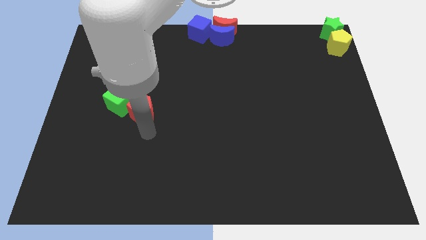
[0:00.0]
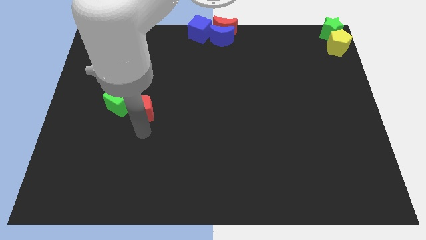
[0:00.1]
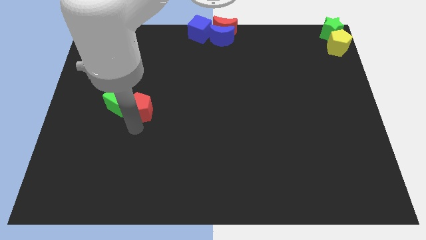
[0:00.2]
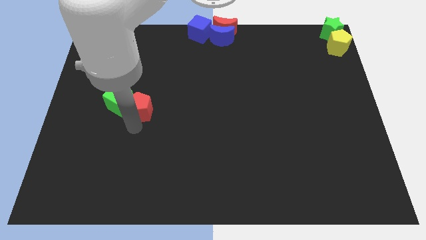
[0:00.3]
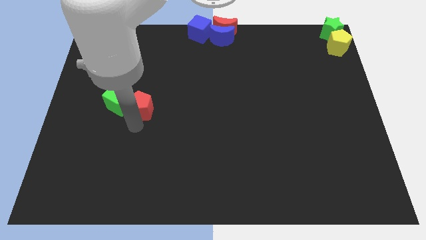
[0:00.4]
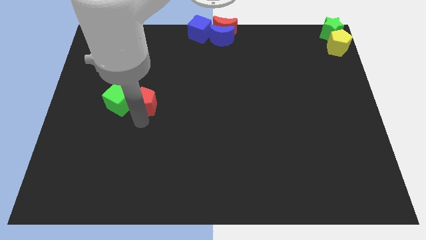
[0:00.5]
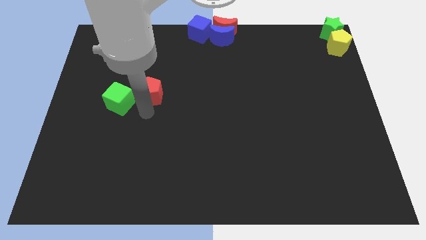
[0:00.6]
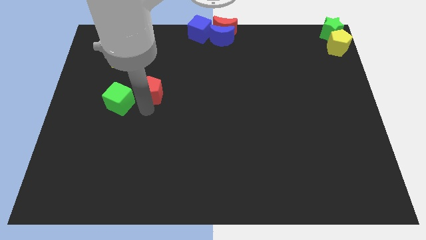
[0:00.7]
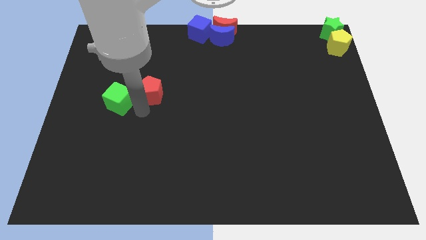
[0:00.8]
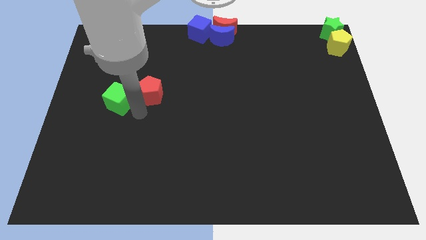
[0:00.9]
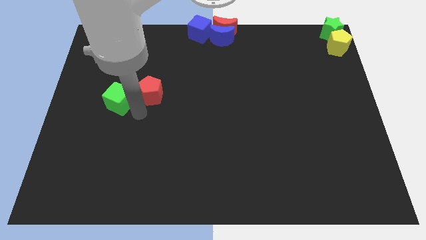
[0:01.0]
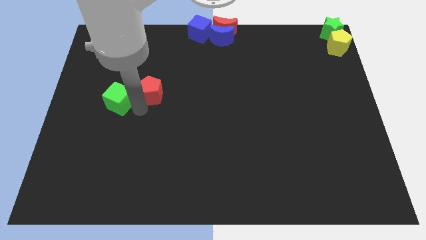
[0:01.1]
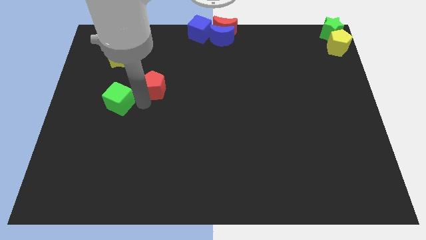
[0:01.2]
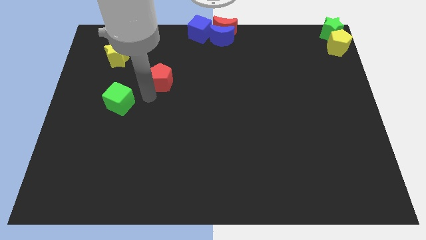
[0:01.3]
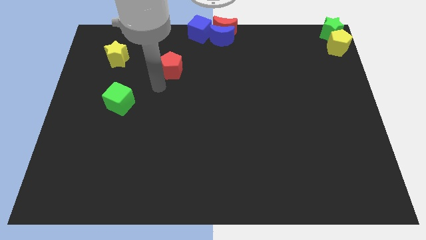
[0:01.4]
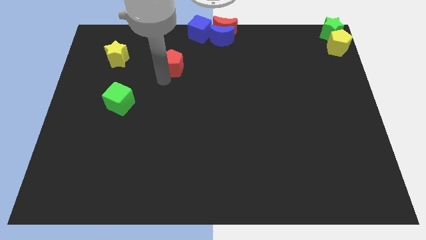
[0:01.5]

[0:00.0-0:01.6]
separate the red pentagon from the green cube

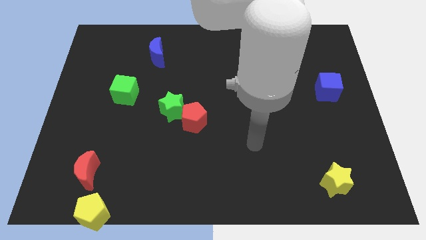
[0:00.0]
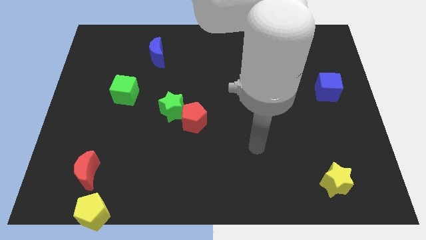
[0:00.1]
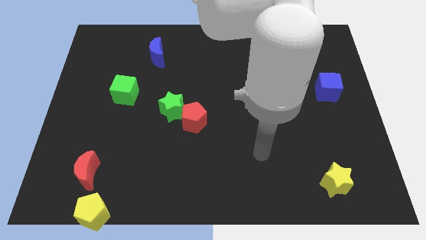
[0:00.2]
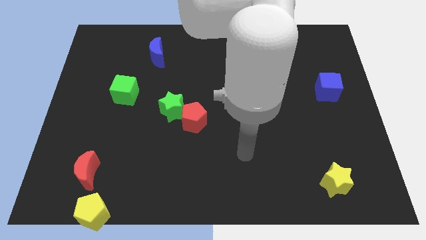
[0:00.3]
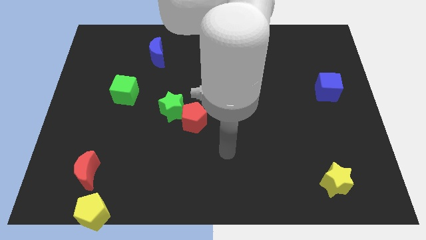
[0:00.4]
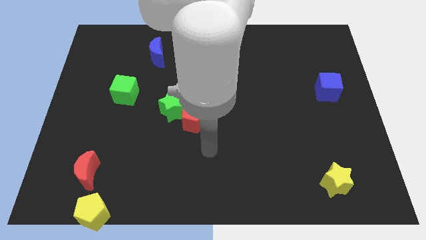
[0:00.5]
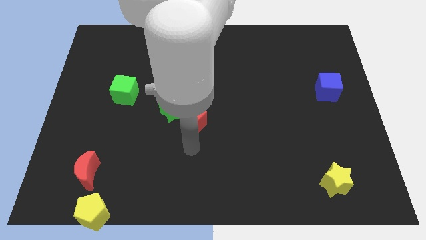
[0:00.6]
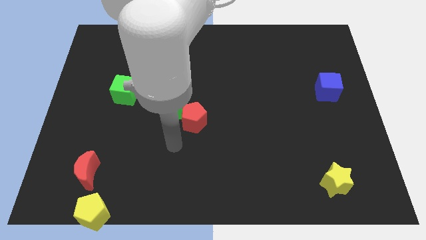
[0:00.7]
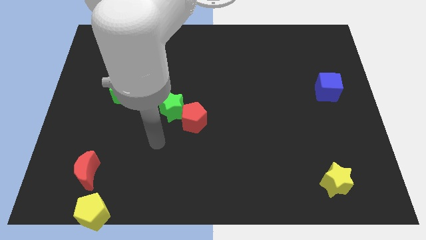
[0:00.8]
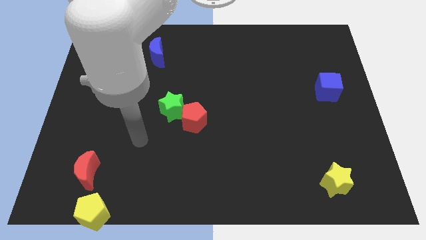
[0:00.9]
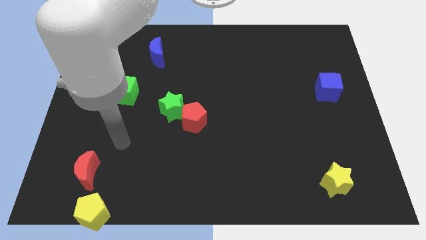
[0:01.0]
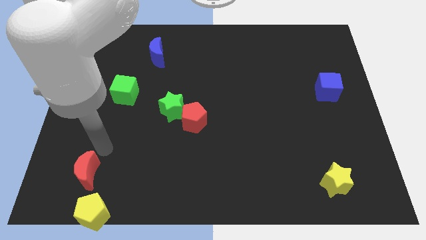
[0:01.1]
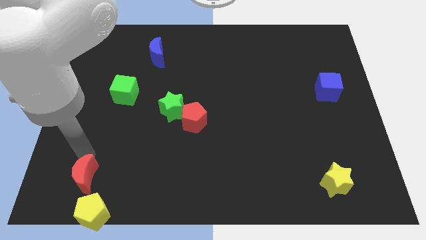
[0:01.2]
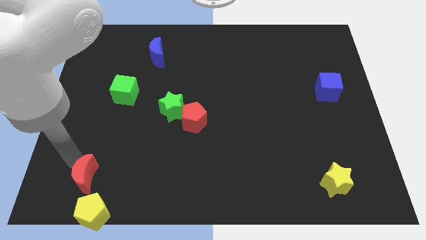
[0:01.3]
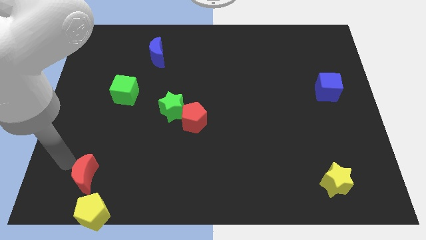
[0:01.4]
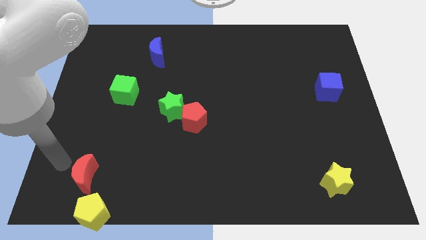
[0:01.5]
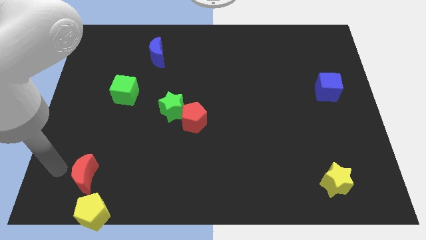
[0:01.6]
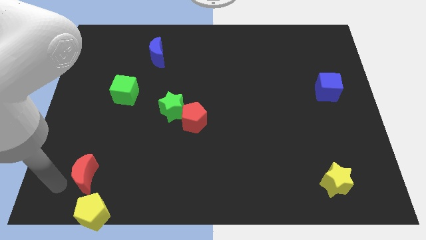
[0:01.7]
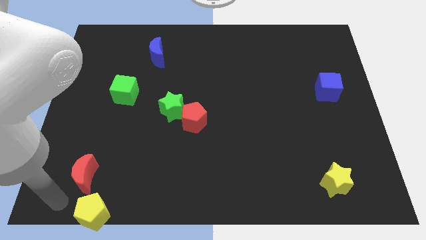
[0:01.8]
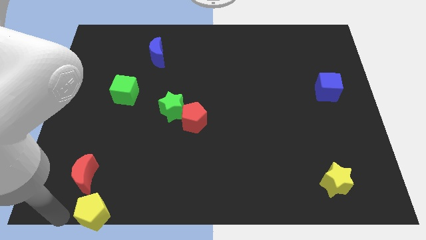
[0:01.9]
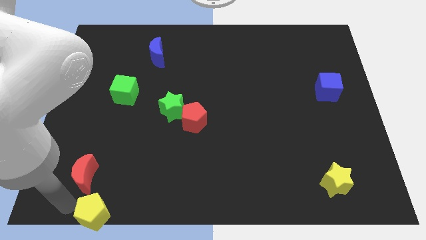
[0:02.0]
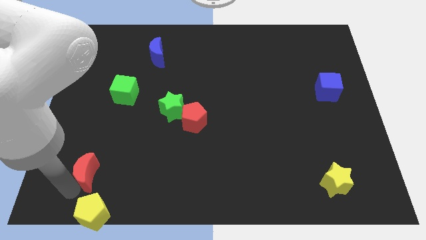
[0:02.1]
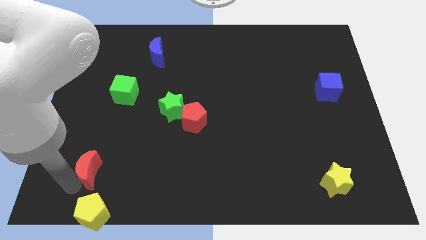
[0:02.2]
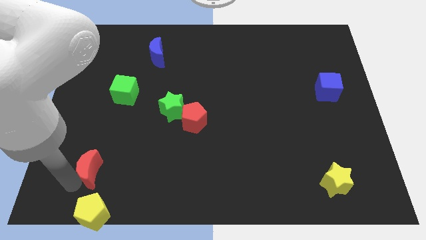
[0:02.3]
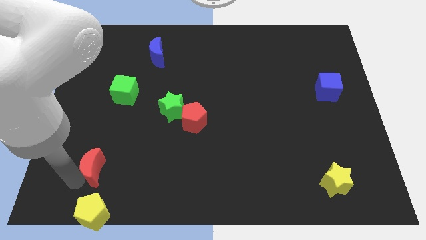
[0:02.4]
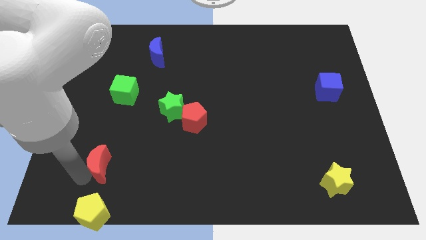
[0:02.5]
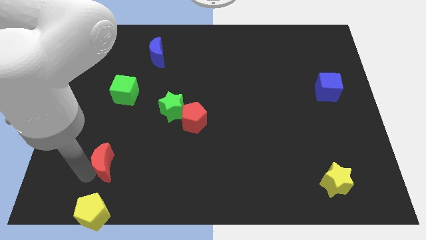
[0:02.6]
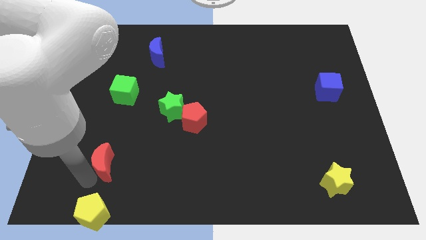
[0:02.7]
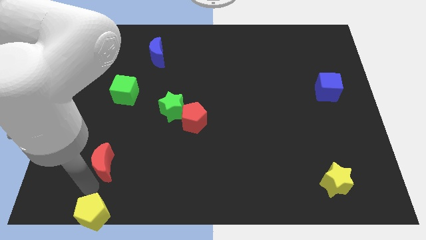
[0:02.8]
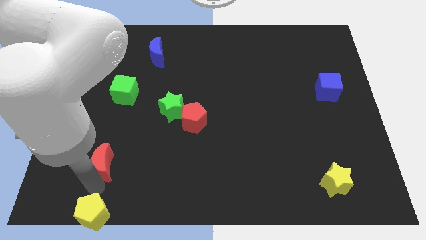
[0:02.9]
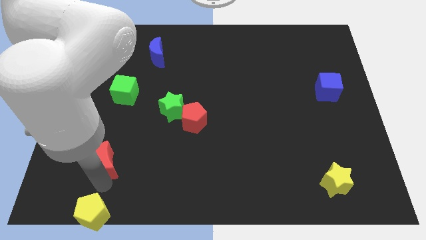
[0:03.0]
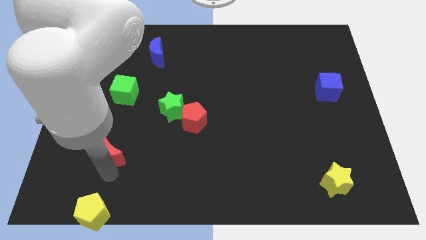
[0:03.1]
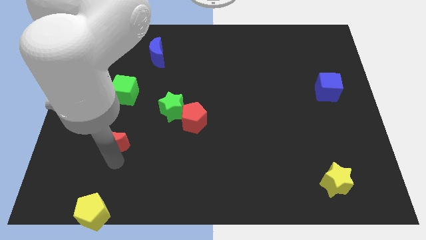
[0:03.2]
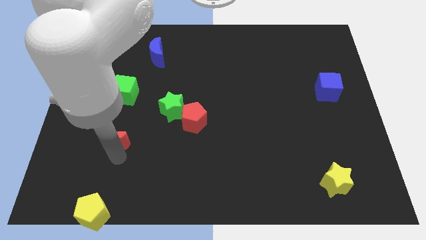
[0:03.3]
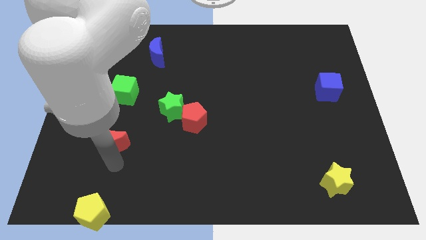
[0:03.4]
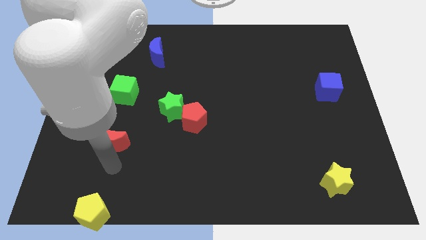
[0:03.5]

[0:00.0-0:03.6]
place the red moon below the green cube

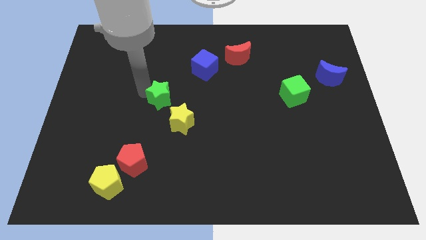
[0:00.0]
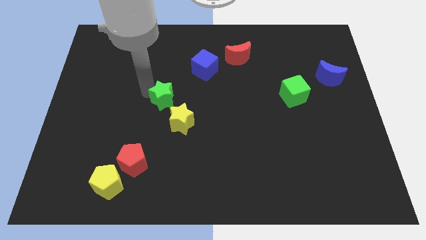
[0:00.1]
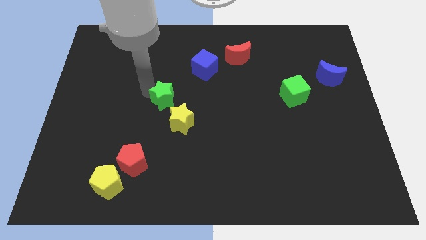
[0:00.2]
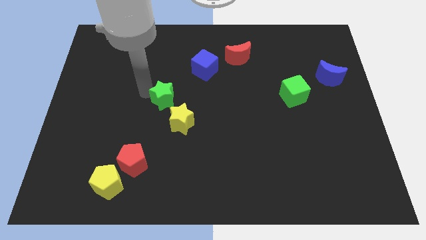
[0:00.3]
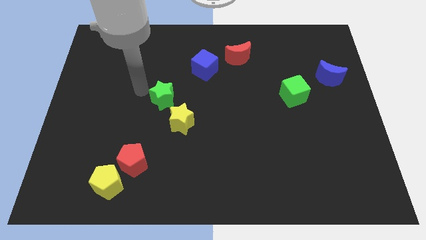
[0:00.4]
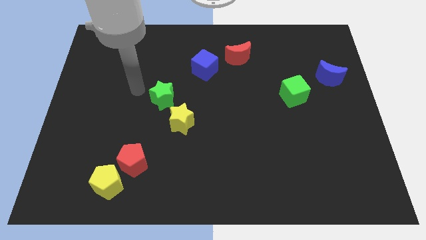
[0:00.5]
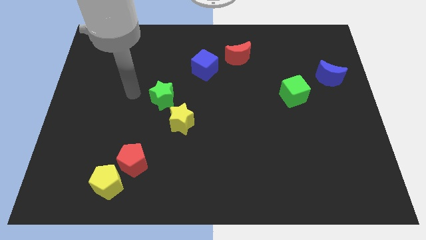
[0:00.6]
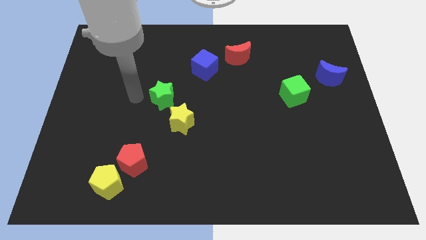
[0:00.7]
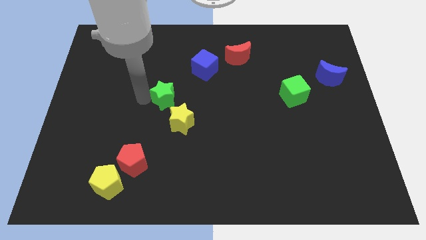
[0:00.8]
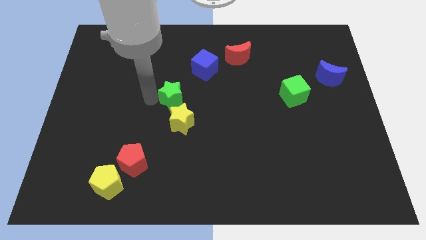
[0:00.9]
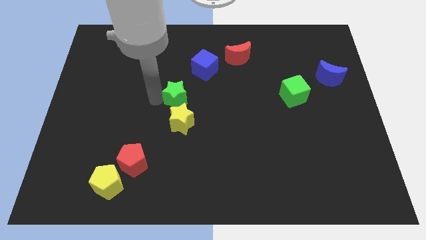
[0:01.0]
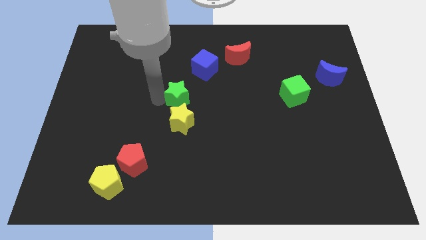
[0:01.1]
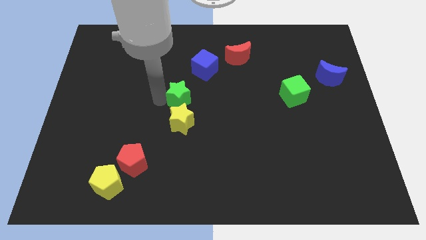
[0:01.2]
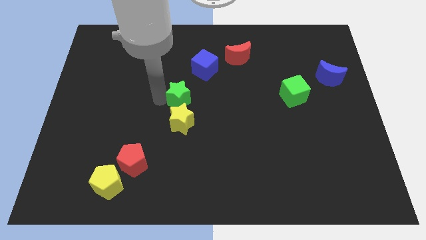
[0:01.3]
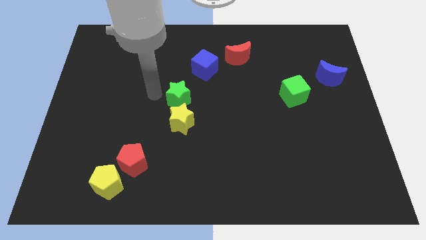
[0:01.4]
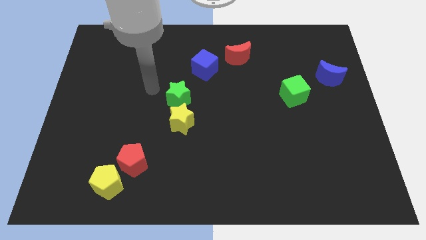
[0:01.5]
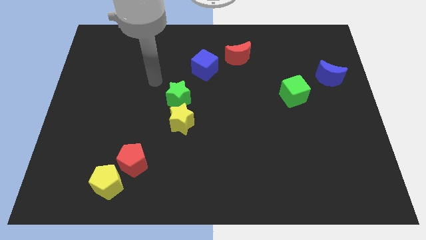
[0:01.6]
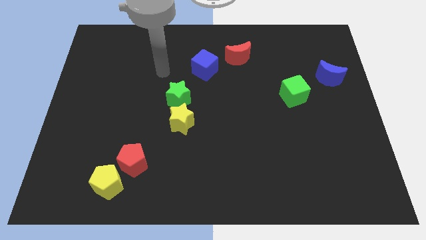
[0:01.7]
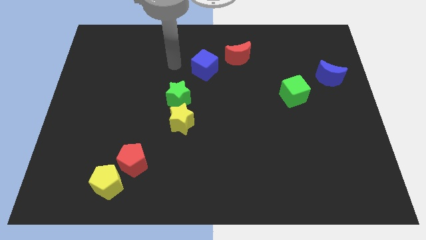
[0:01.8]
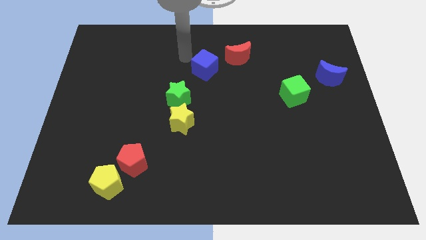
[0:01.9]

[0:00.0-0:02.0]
place green star above the yellow star

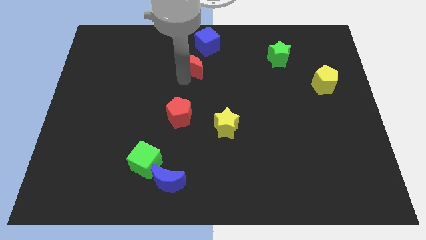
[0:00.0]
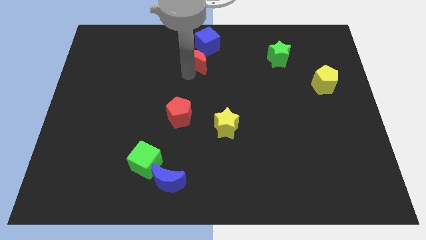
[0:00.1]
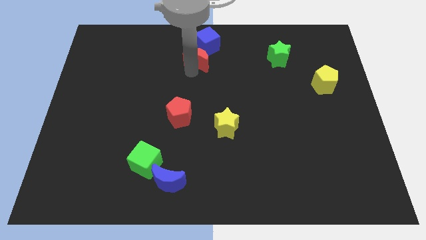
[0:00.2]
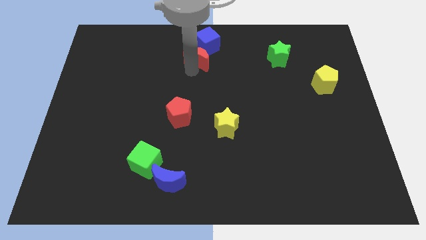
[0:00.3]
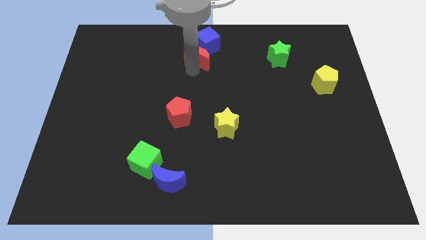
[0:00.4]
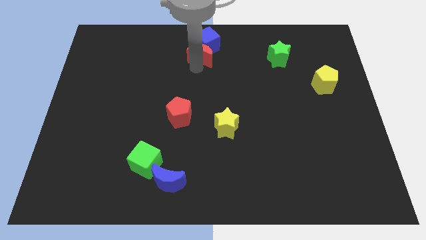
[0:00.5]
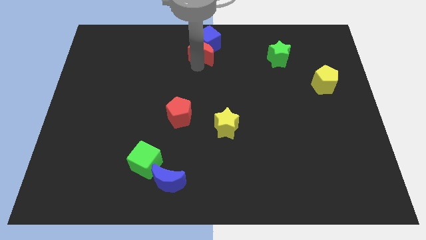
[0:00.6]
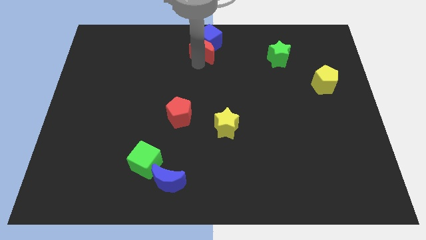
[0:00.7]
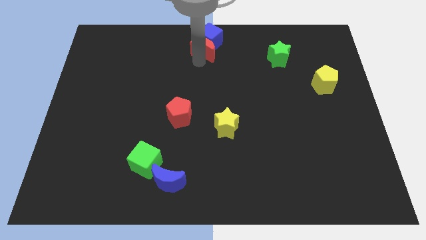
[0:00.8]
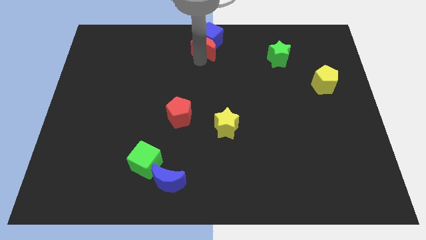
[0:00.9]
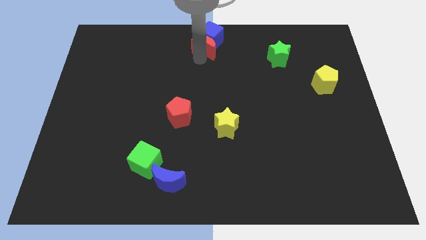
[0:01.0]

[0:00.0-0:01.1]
move the red crescent into the blue cube

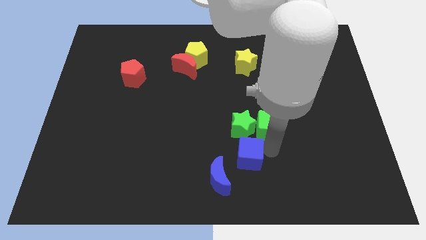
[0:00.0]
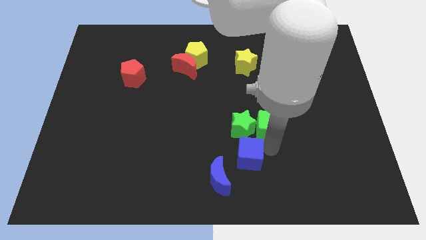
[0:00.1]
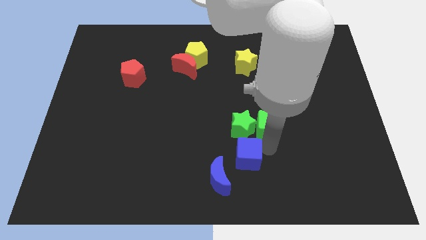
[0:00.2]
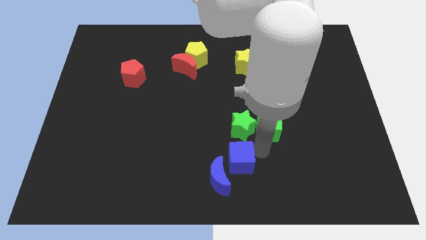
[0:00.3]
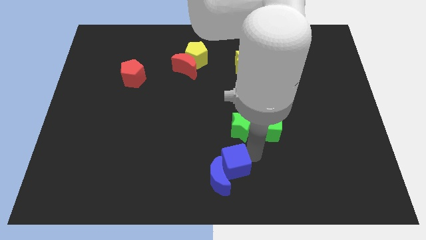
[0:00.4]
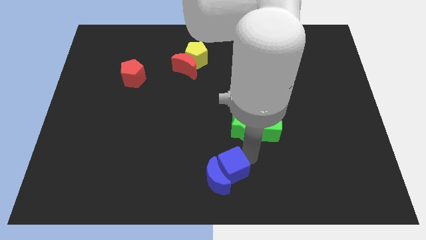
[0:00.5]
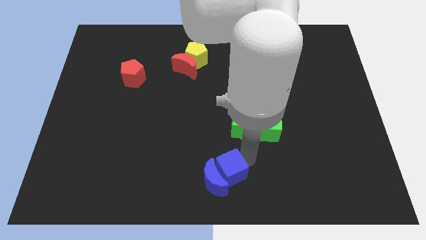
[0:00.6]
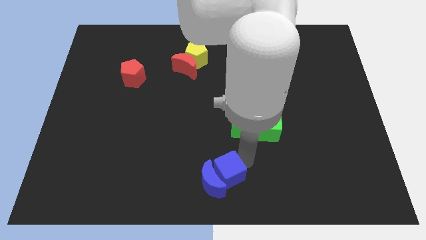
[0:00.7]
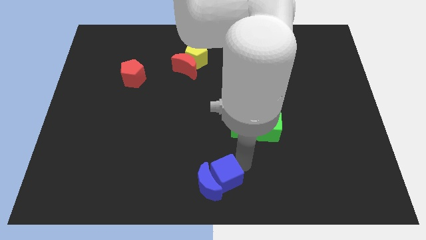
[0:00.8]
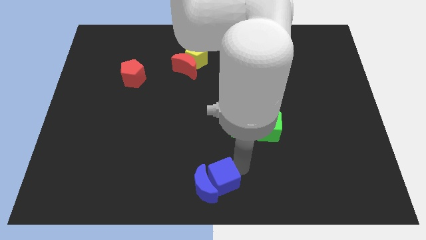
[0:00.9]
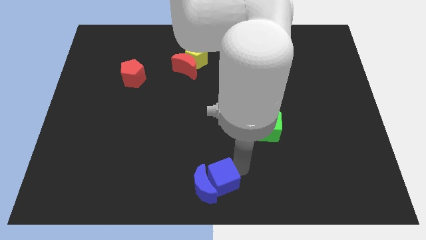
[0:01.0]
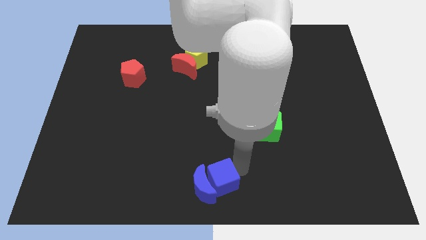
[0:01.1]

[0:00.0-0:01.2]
move blue cube into blue moon
